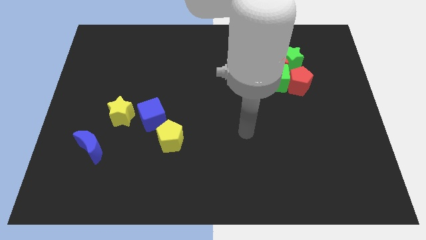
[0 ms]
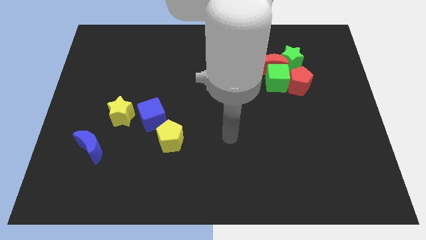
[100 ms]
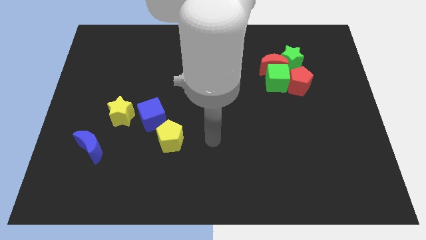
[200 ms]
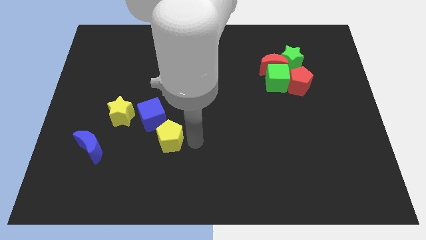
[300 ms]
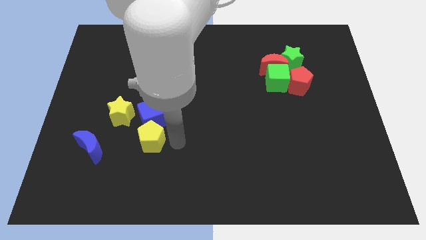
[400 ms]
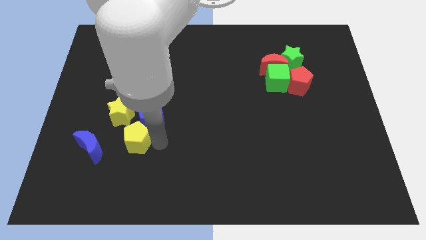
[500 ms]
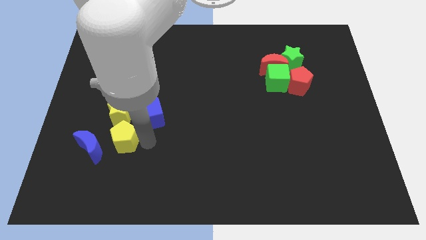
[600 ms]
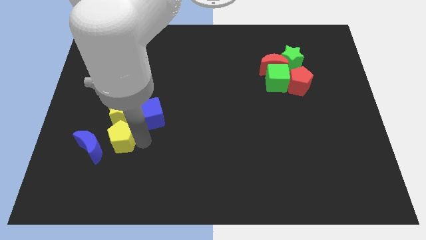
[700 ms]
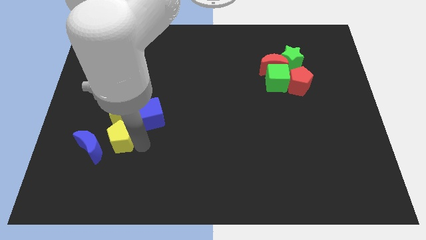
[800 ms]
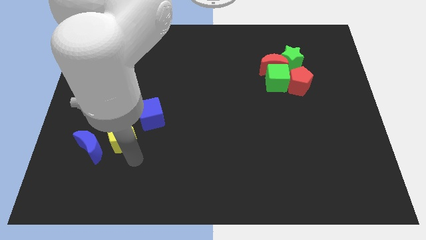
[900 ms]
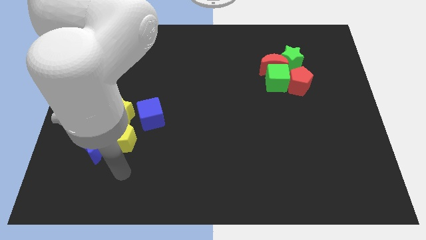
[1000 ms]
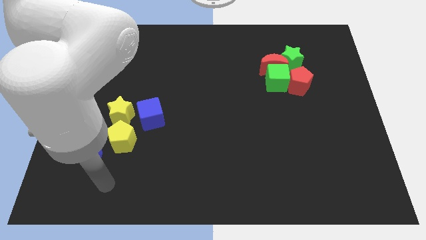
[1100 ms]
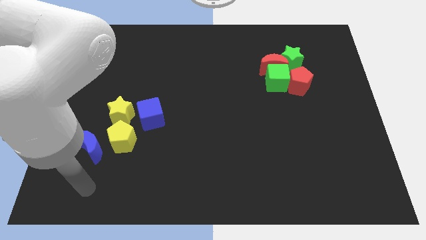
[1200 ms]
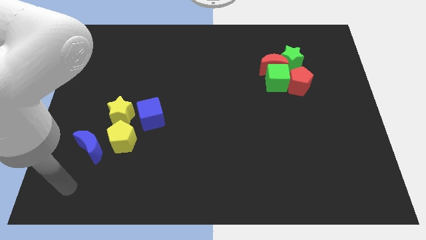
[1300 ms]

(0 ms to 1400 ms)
place the yellow pentagon below the yellow star

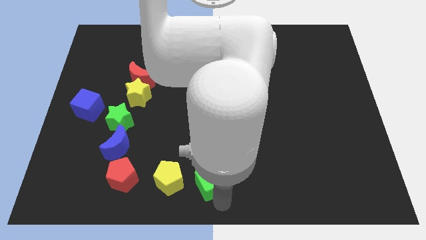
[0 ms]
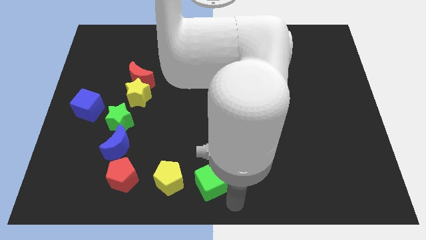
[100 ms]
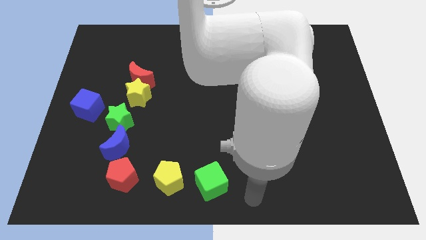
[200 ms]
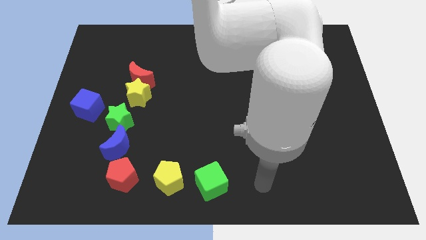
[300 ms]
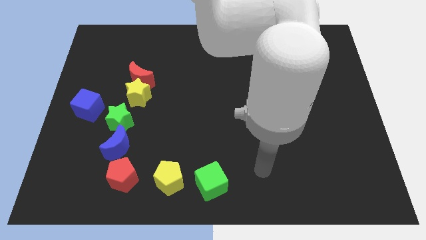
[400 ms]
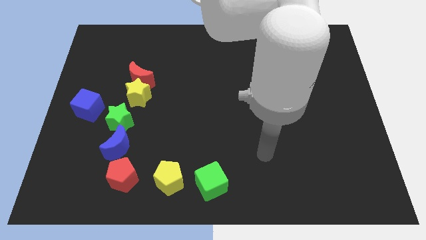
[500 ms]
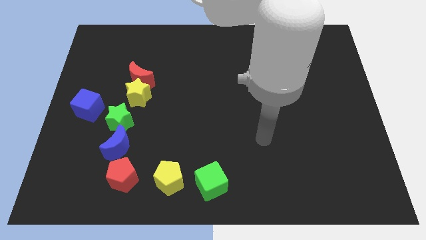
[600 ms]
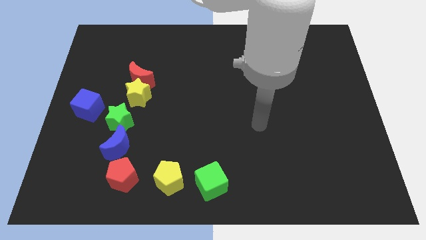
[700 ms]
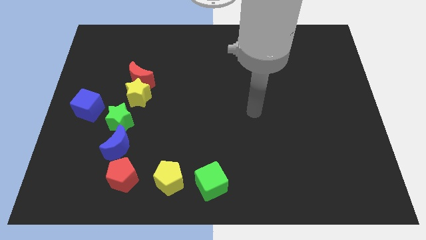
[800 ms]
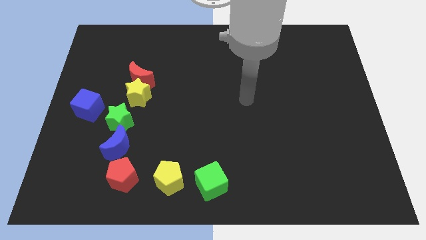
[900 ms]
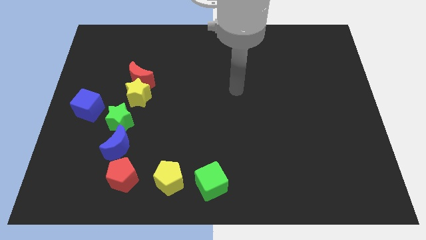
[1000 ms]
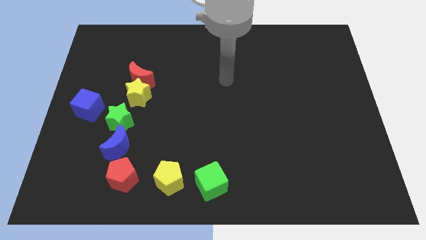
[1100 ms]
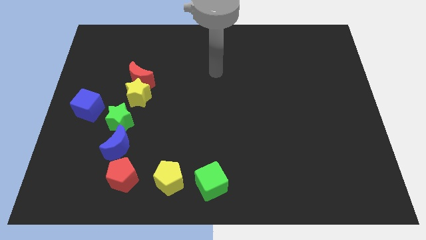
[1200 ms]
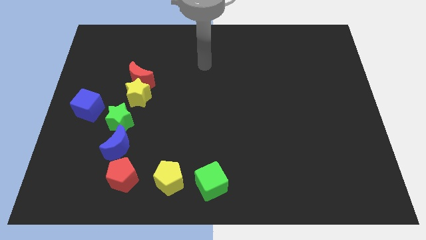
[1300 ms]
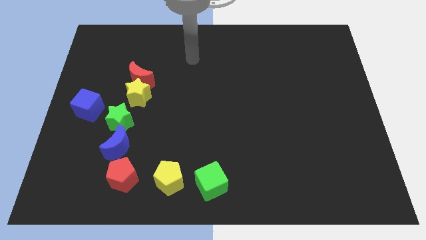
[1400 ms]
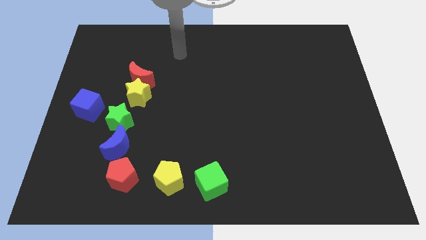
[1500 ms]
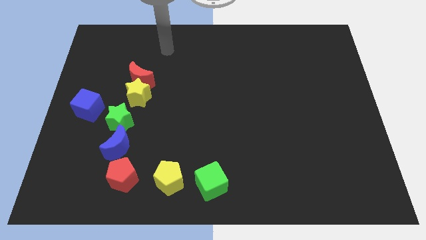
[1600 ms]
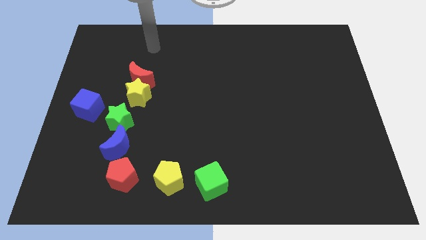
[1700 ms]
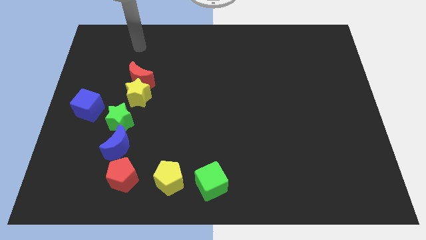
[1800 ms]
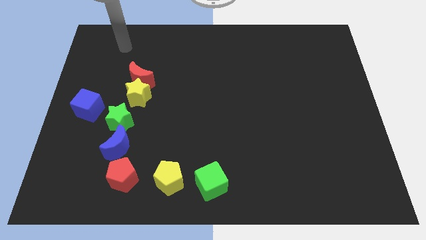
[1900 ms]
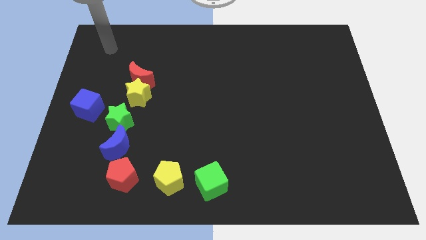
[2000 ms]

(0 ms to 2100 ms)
move your hand towards the top left corner

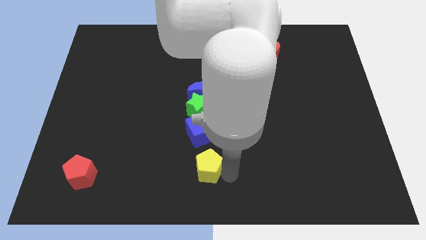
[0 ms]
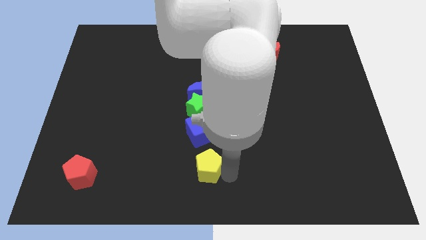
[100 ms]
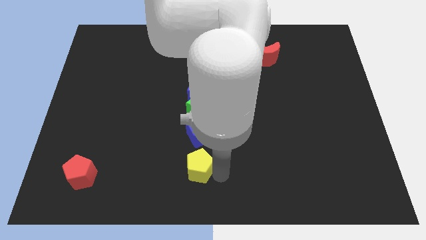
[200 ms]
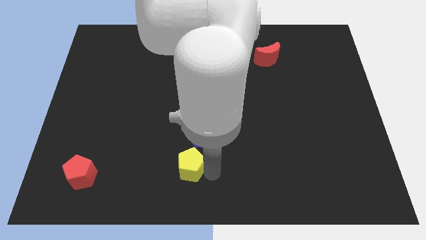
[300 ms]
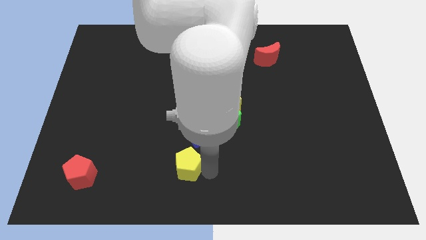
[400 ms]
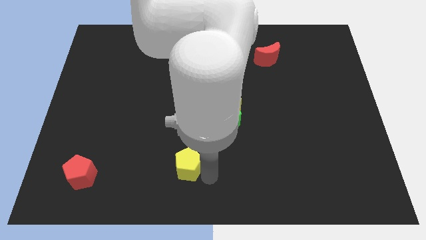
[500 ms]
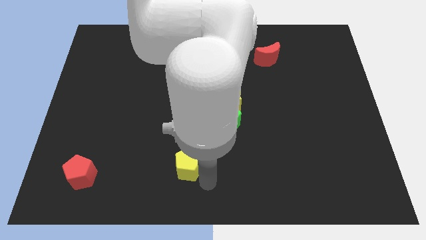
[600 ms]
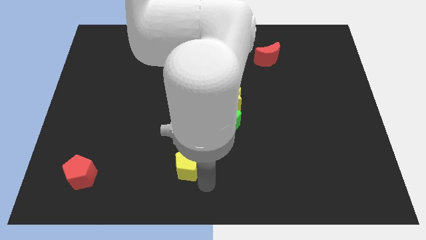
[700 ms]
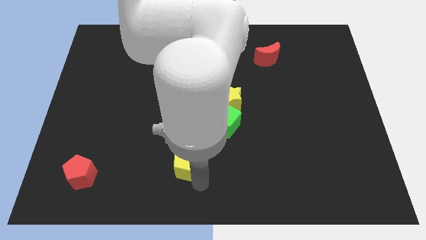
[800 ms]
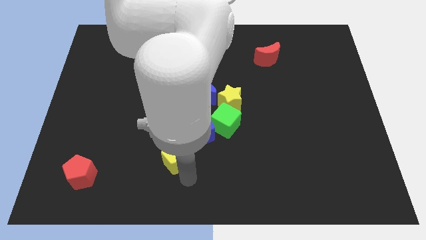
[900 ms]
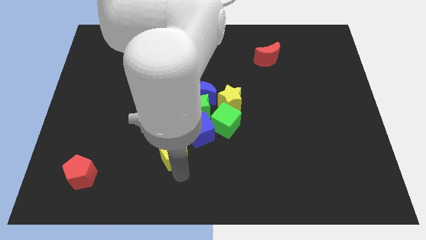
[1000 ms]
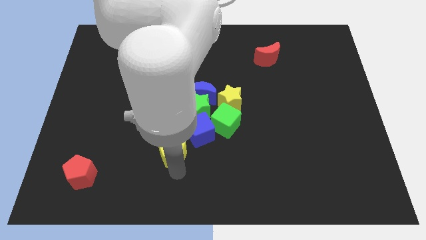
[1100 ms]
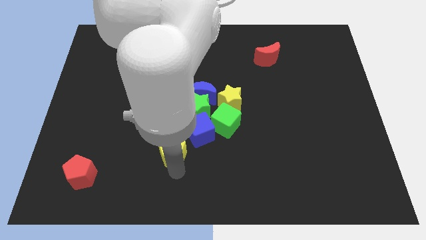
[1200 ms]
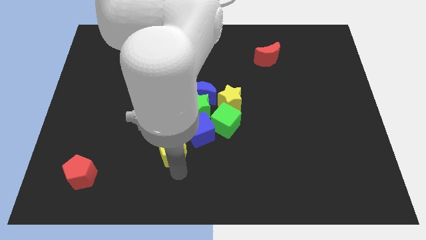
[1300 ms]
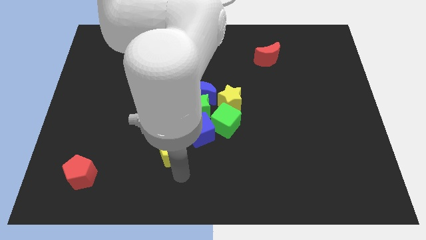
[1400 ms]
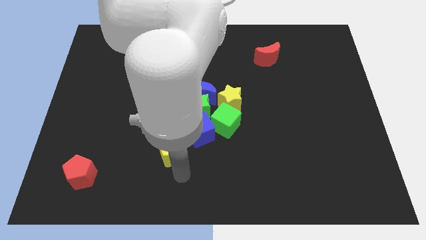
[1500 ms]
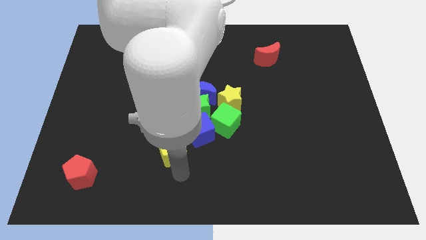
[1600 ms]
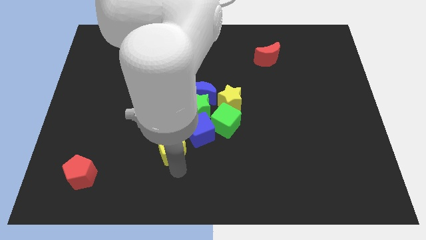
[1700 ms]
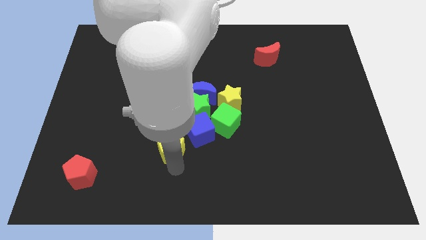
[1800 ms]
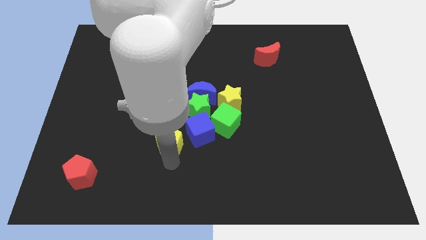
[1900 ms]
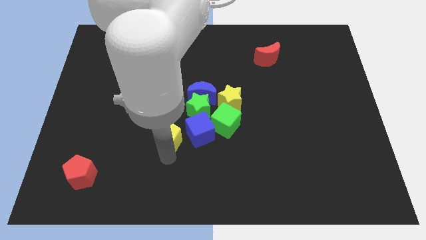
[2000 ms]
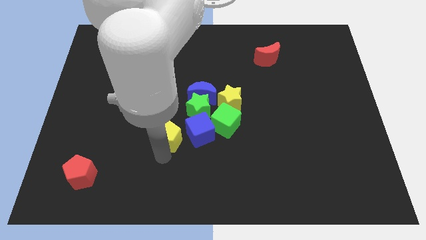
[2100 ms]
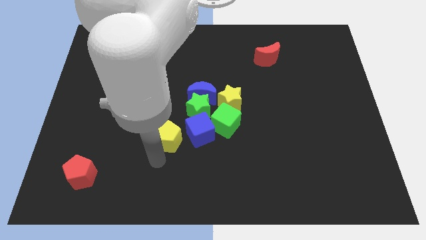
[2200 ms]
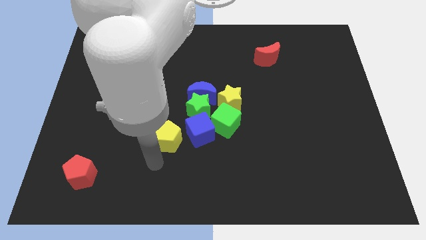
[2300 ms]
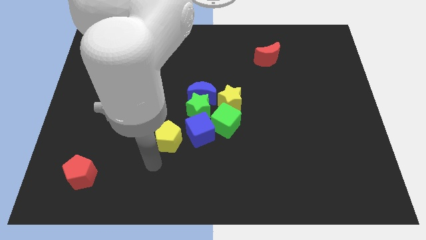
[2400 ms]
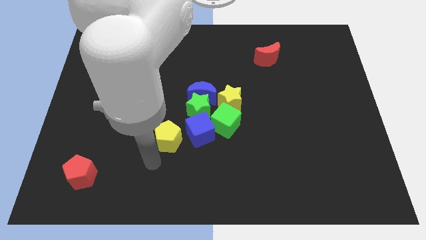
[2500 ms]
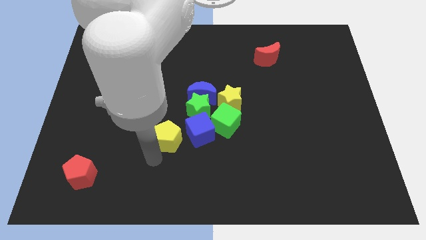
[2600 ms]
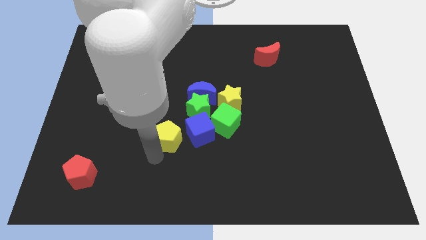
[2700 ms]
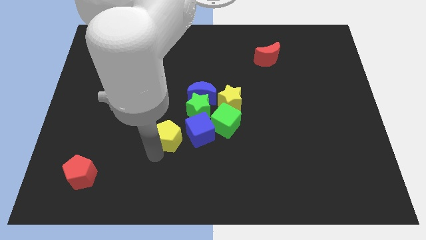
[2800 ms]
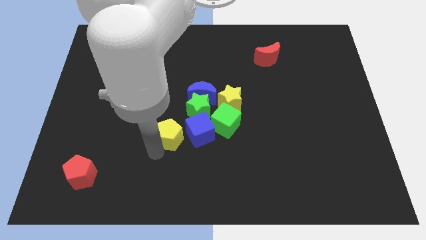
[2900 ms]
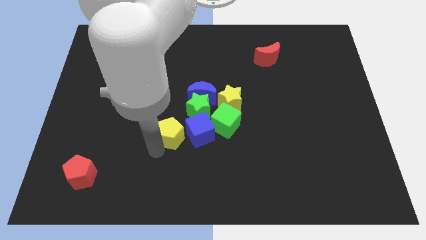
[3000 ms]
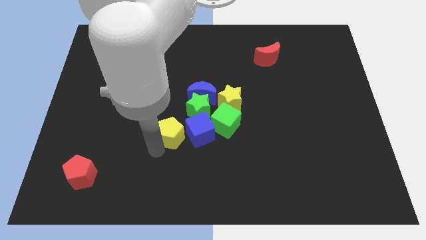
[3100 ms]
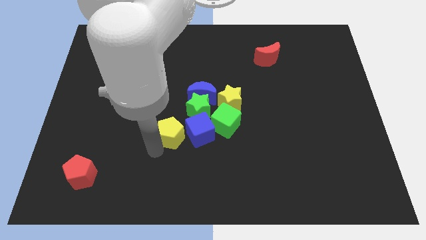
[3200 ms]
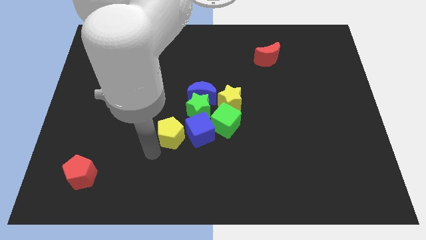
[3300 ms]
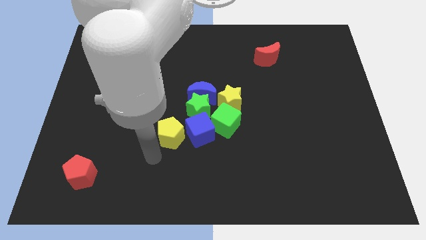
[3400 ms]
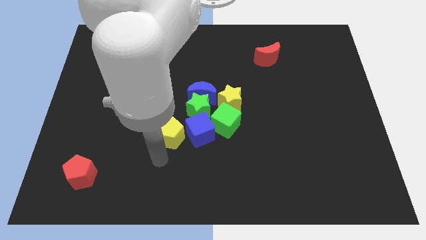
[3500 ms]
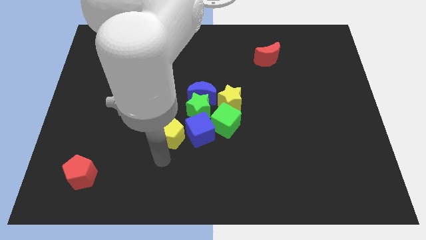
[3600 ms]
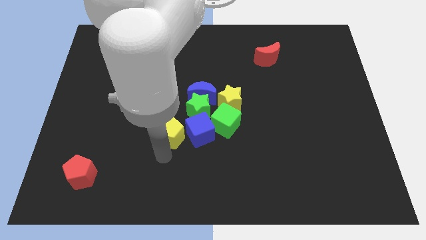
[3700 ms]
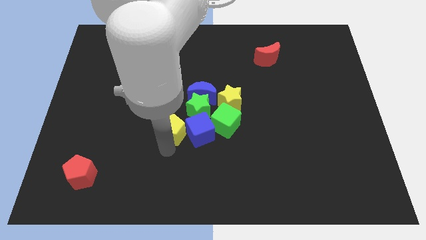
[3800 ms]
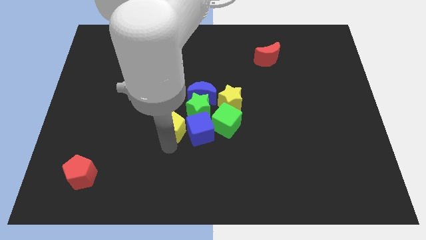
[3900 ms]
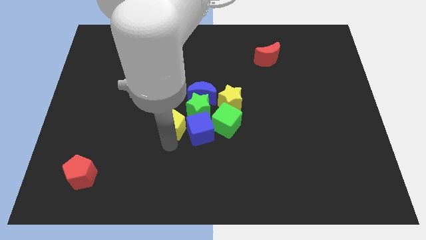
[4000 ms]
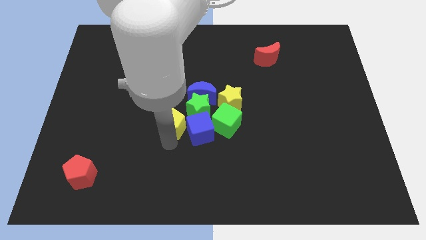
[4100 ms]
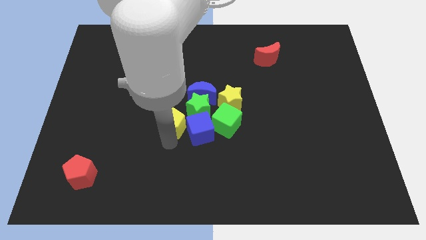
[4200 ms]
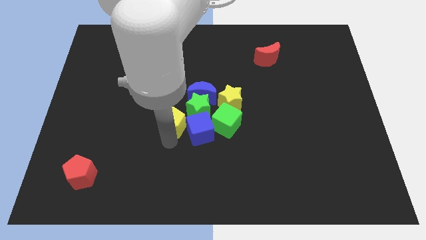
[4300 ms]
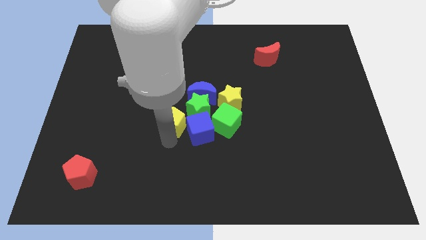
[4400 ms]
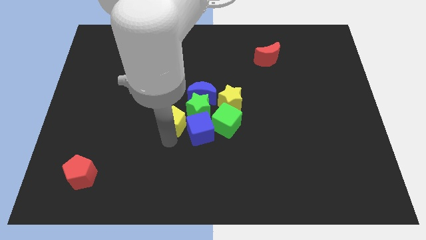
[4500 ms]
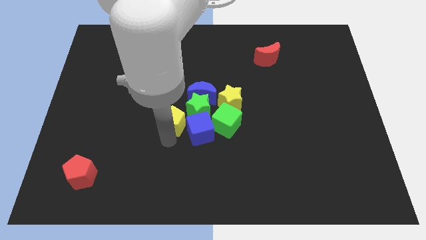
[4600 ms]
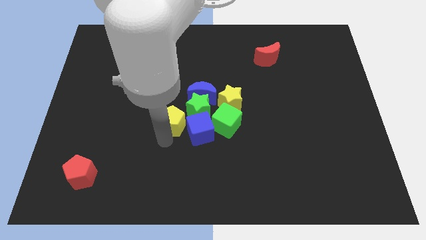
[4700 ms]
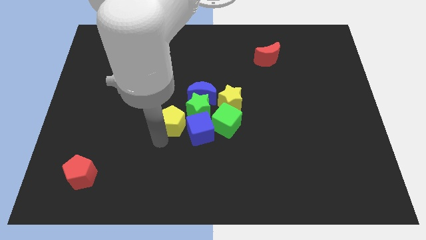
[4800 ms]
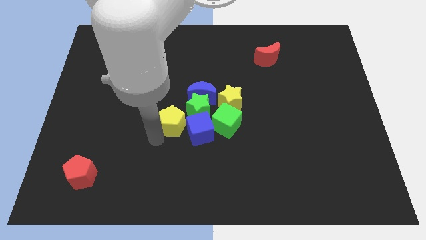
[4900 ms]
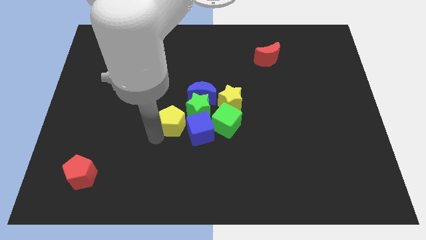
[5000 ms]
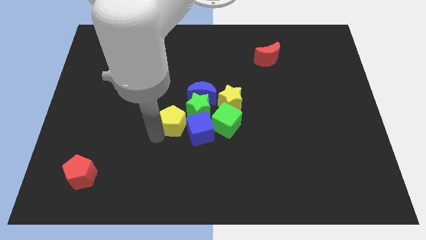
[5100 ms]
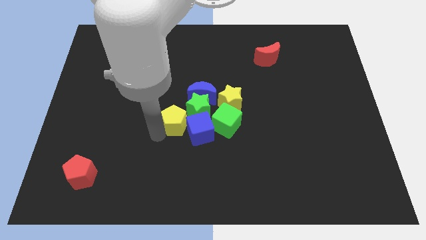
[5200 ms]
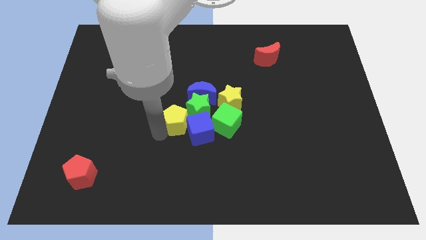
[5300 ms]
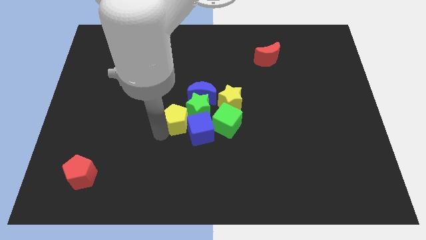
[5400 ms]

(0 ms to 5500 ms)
push the yellow pentagon into the group of blocks
